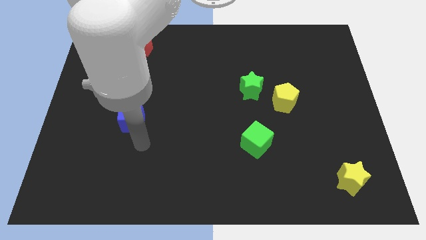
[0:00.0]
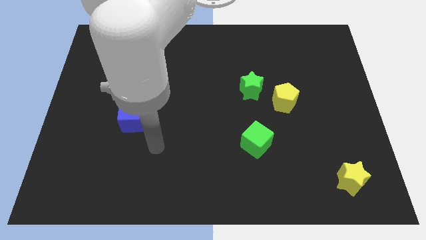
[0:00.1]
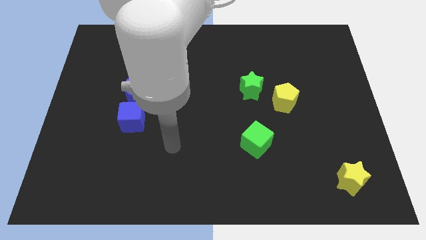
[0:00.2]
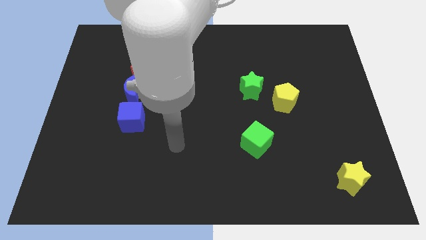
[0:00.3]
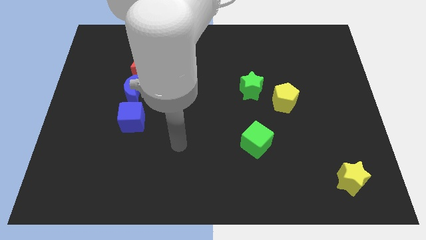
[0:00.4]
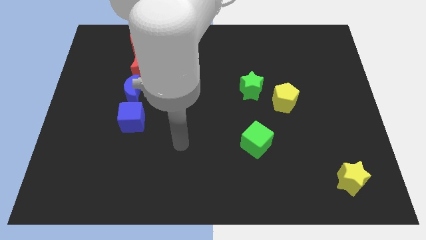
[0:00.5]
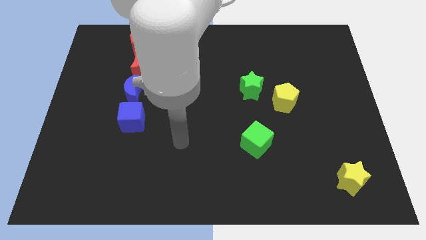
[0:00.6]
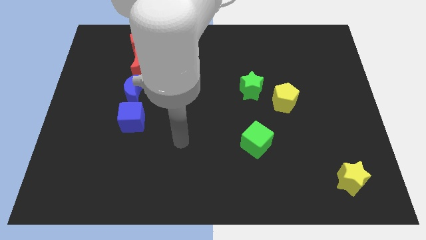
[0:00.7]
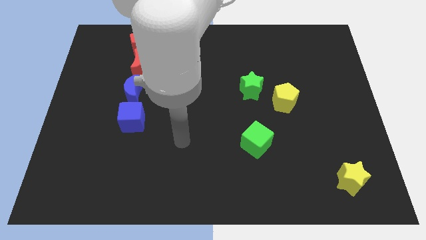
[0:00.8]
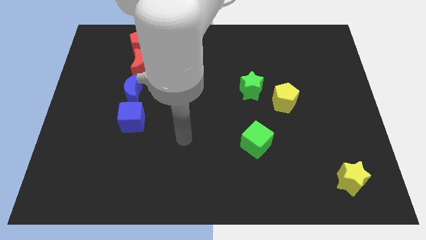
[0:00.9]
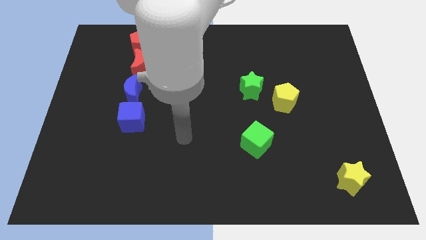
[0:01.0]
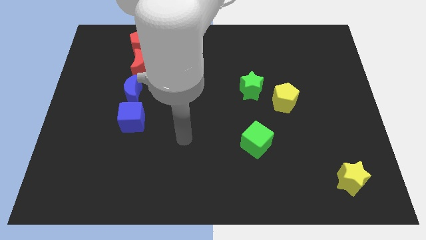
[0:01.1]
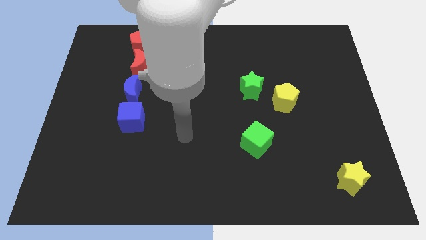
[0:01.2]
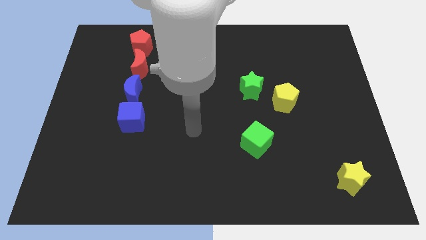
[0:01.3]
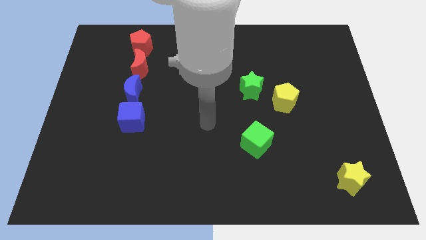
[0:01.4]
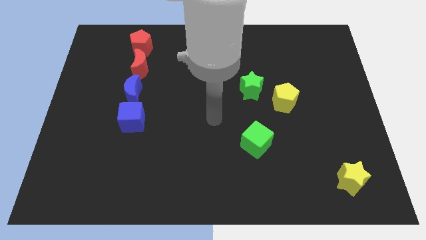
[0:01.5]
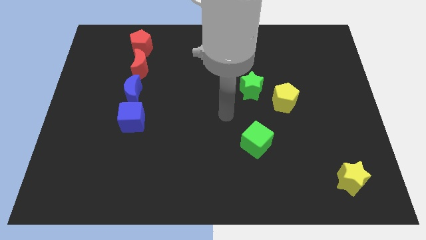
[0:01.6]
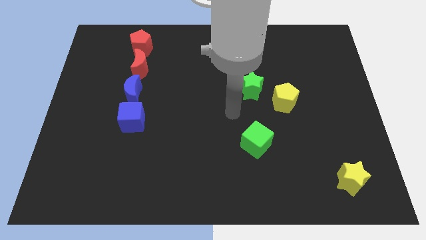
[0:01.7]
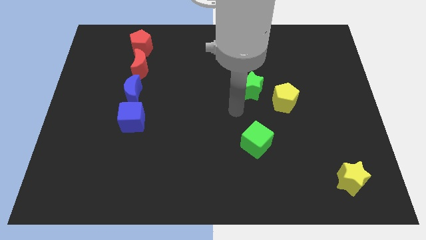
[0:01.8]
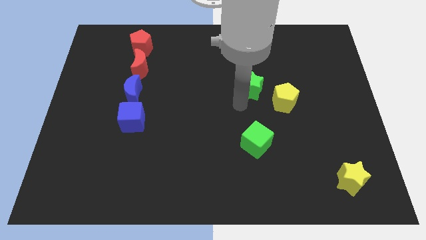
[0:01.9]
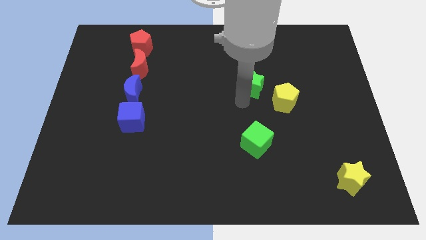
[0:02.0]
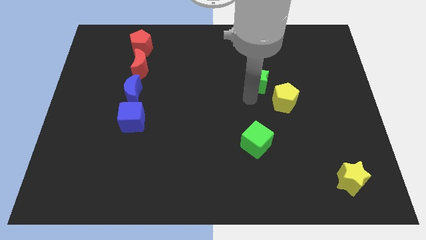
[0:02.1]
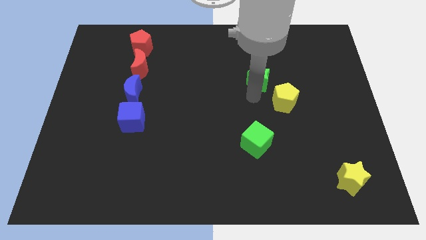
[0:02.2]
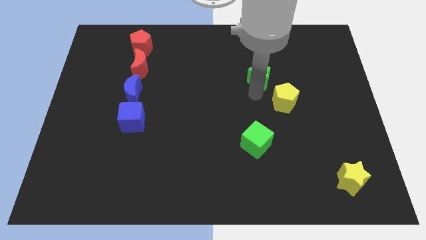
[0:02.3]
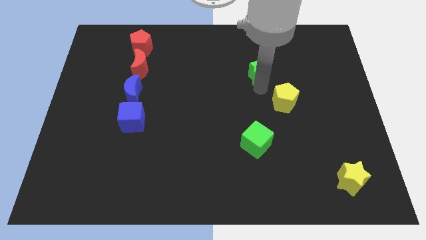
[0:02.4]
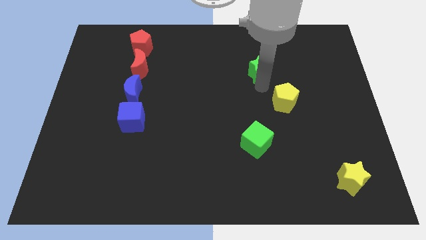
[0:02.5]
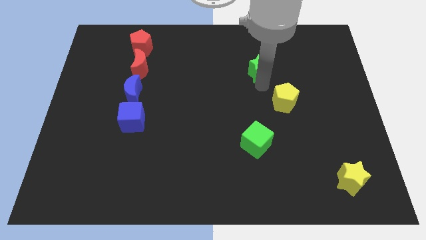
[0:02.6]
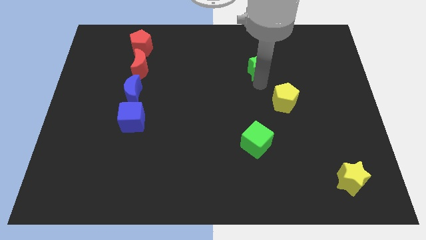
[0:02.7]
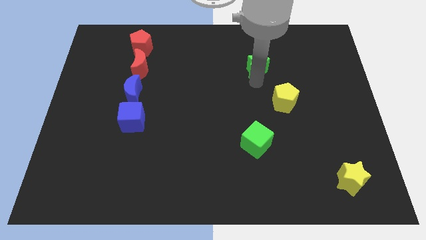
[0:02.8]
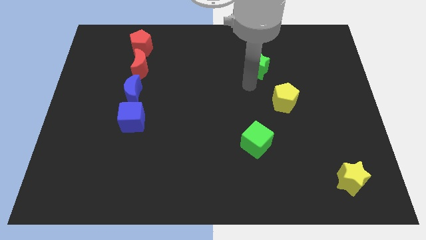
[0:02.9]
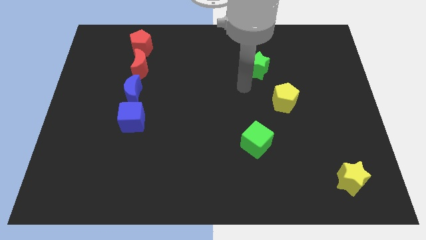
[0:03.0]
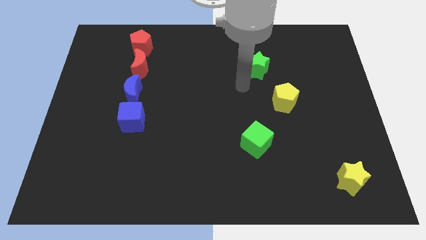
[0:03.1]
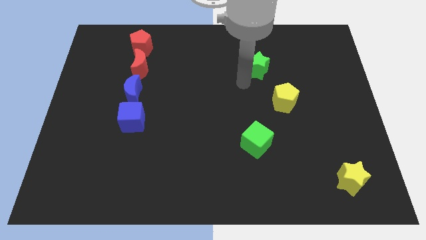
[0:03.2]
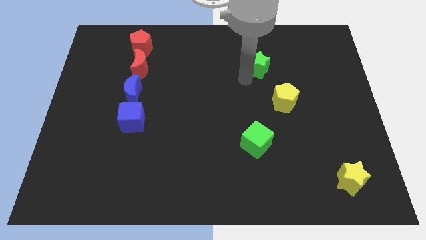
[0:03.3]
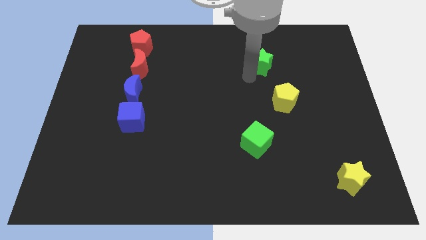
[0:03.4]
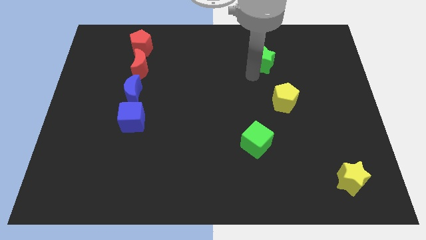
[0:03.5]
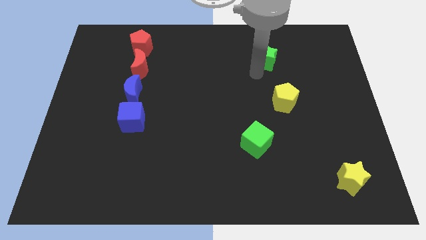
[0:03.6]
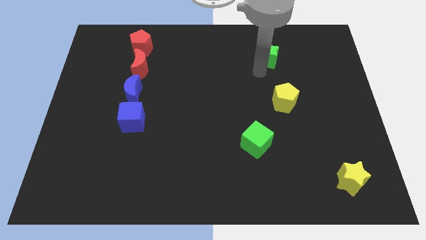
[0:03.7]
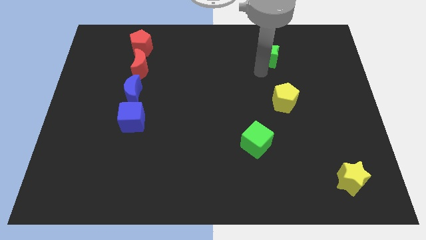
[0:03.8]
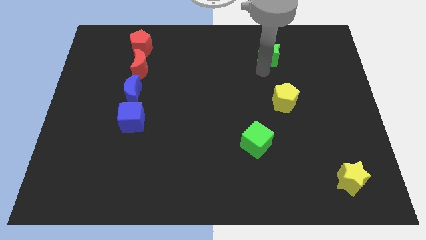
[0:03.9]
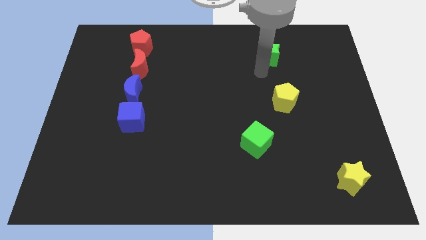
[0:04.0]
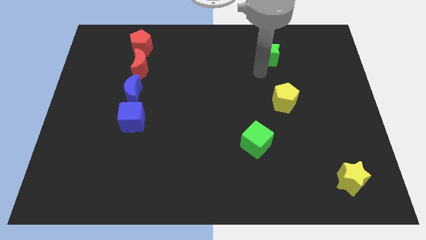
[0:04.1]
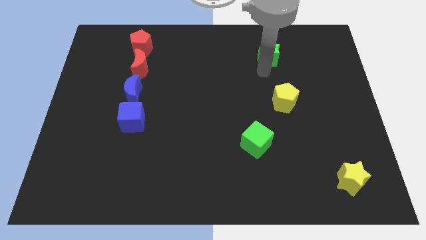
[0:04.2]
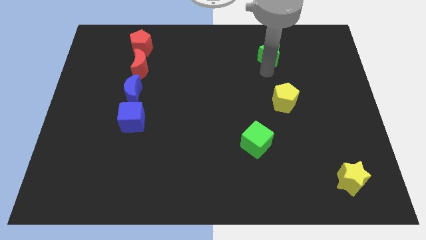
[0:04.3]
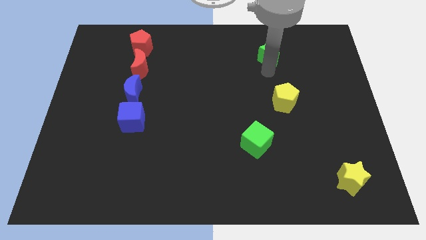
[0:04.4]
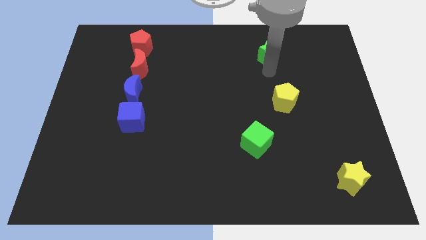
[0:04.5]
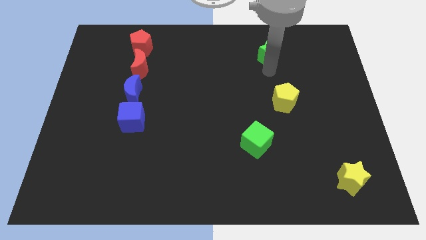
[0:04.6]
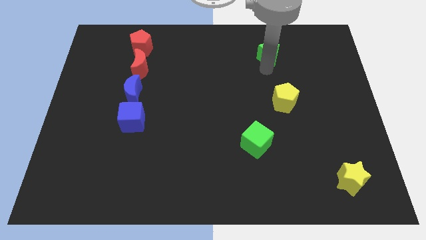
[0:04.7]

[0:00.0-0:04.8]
push the green star toward the top side

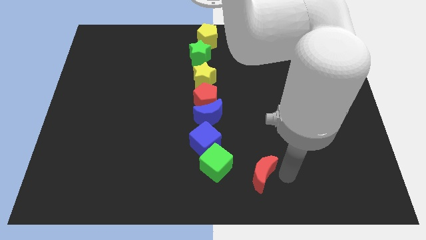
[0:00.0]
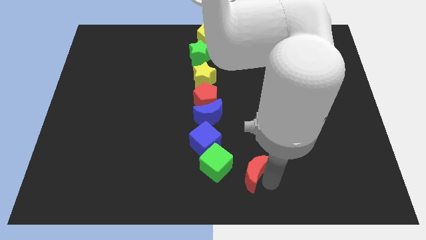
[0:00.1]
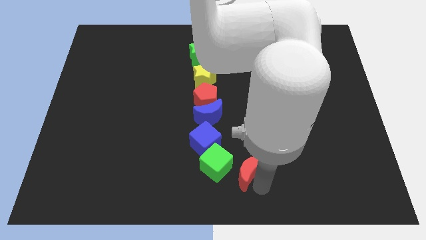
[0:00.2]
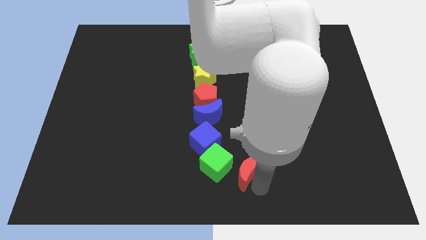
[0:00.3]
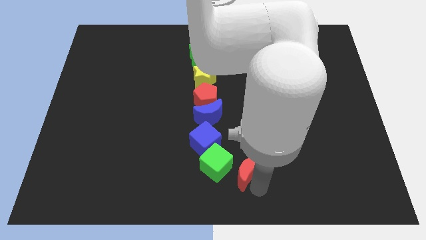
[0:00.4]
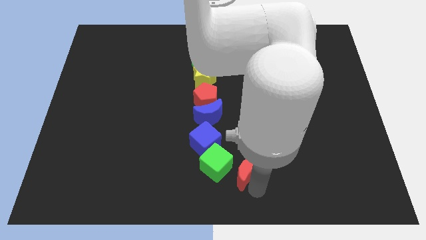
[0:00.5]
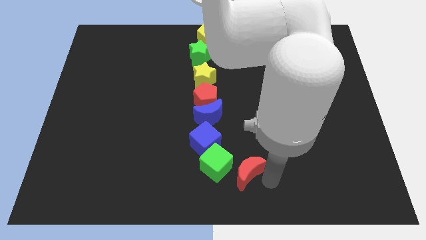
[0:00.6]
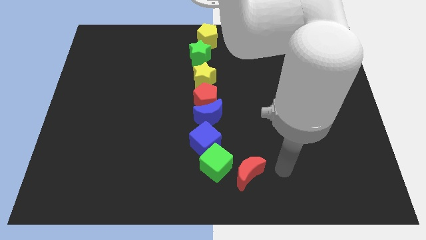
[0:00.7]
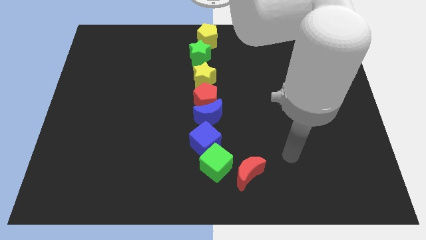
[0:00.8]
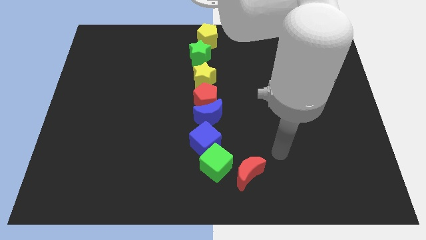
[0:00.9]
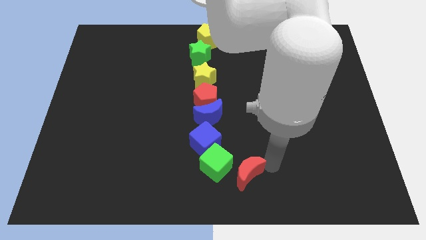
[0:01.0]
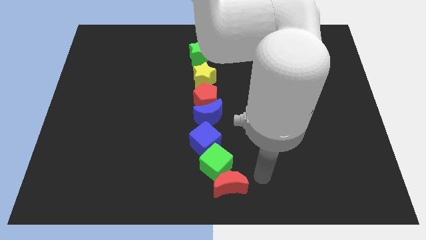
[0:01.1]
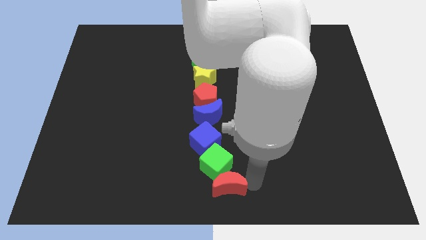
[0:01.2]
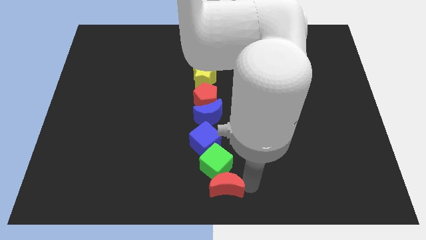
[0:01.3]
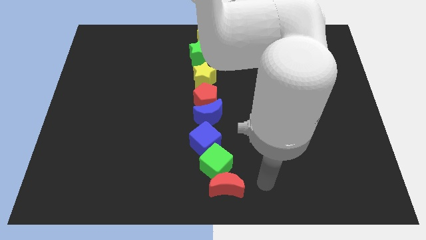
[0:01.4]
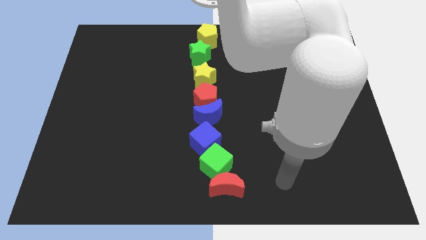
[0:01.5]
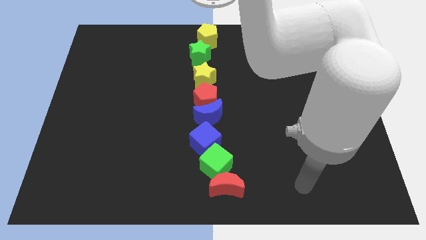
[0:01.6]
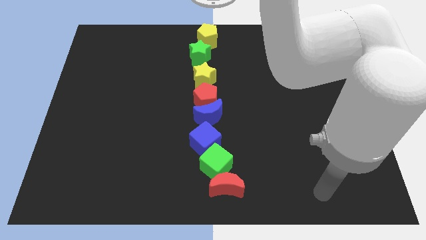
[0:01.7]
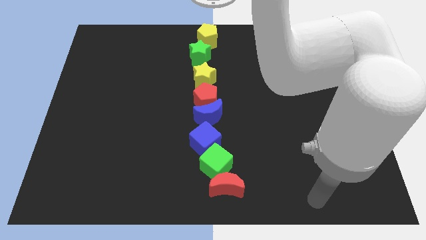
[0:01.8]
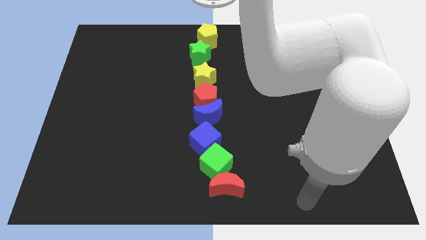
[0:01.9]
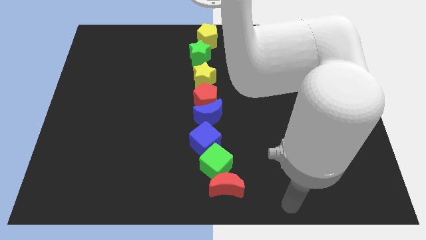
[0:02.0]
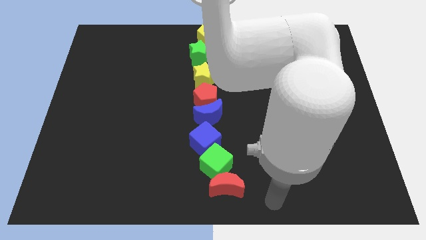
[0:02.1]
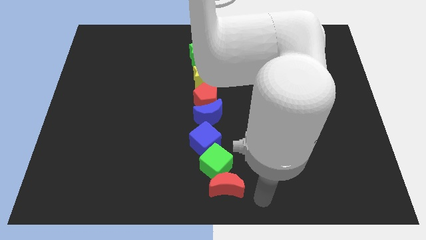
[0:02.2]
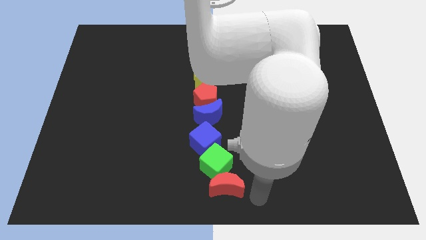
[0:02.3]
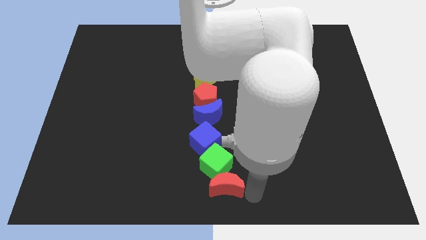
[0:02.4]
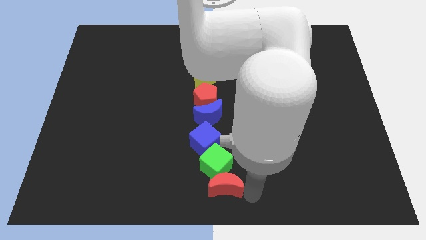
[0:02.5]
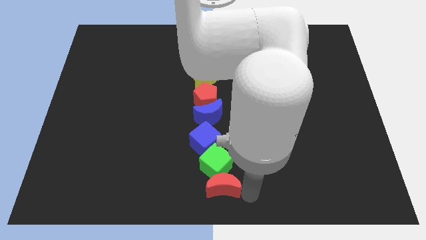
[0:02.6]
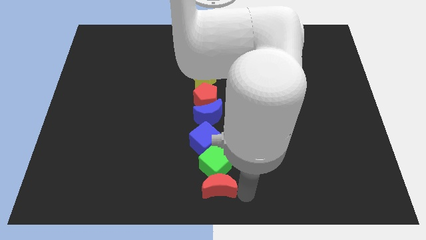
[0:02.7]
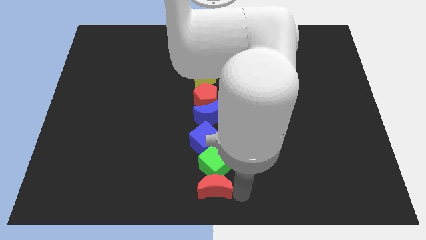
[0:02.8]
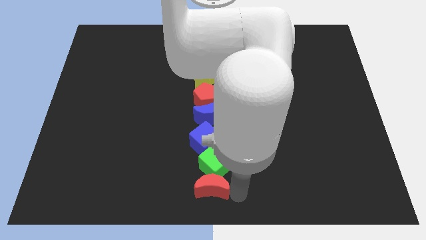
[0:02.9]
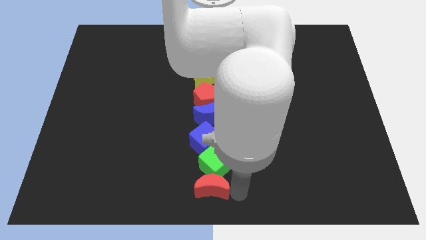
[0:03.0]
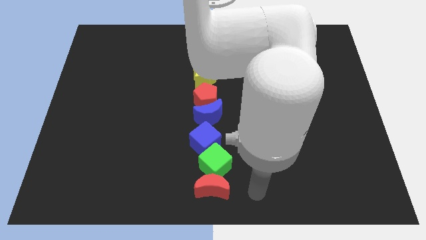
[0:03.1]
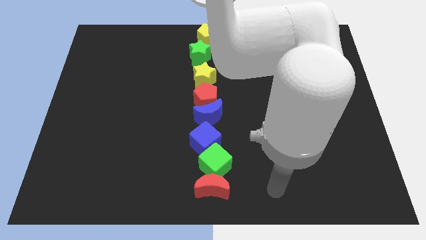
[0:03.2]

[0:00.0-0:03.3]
put the red crescent at the bottom of the green cube

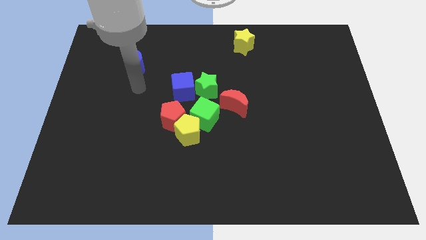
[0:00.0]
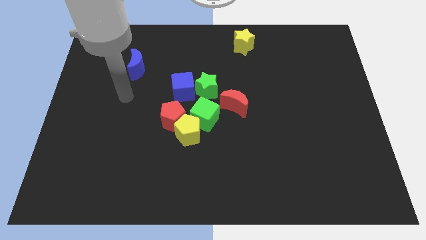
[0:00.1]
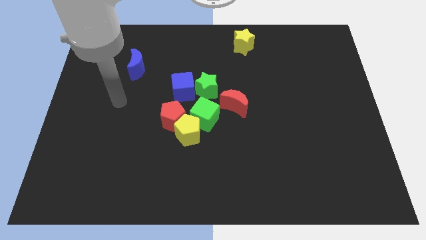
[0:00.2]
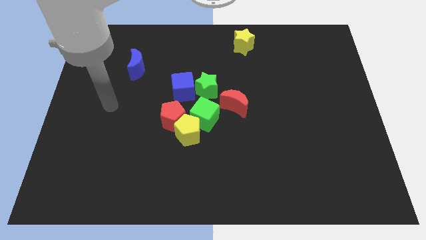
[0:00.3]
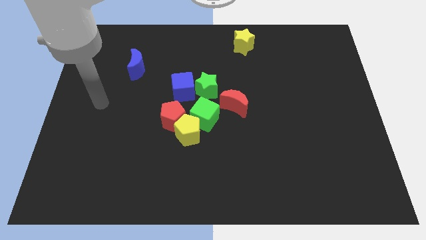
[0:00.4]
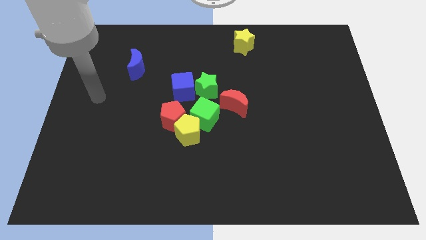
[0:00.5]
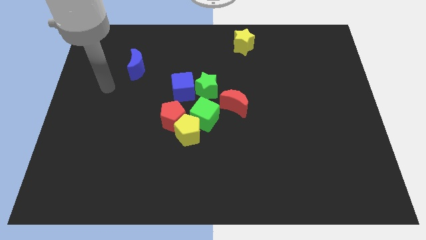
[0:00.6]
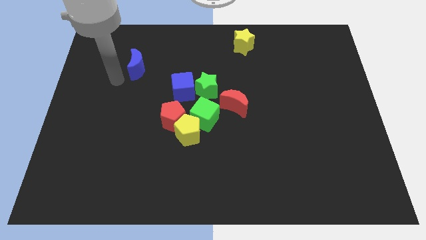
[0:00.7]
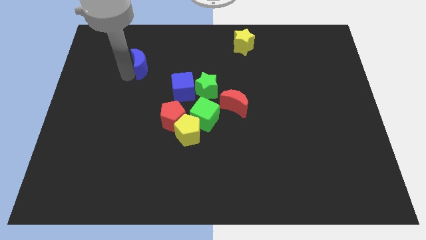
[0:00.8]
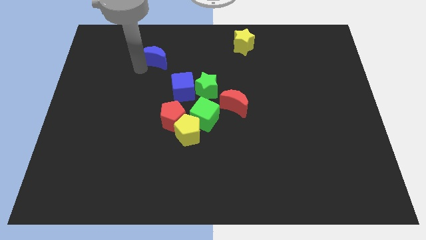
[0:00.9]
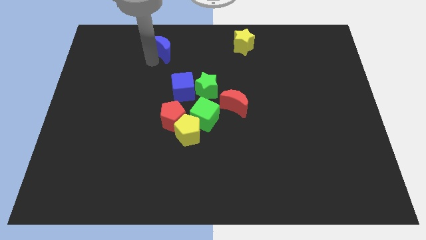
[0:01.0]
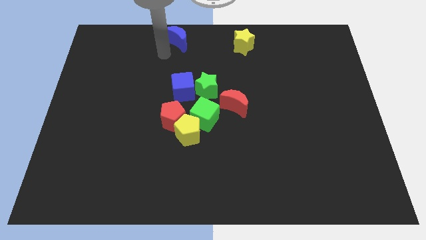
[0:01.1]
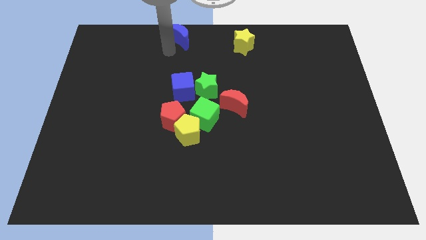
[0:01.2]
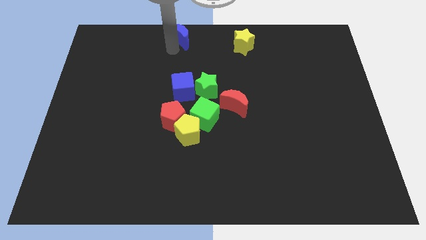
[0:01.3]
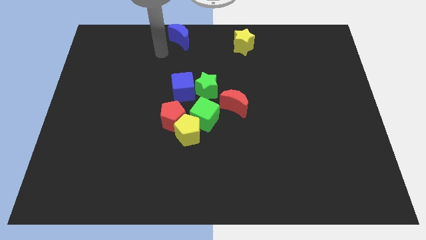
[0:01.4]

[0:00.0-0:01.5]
push the blue semi circle to the top side of the board
